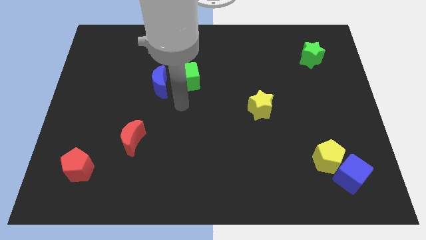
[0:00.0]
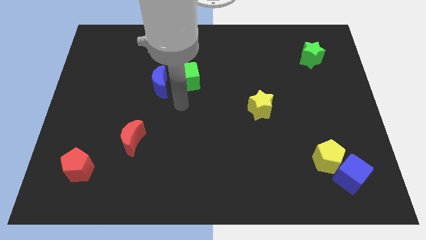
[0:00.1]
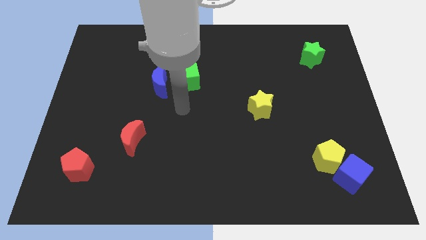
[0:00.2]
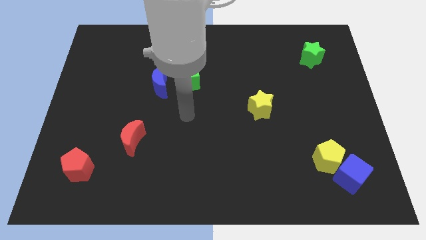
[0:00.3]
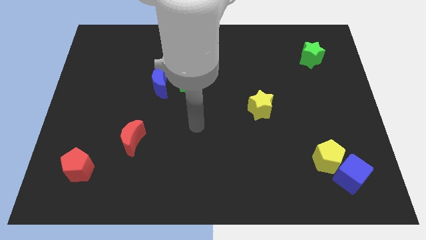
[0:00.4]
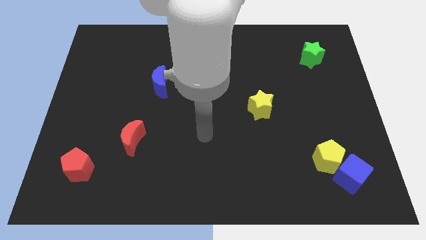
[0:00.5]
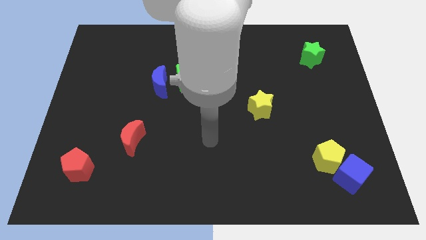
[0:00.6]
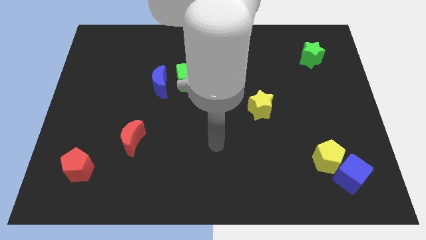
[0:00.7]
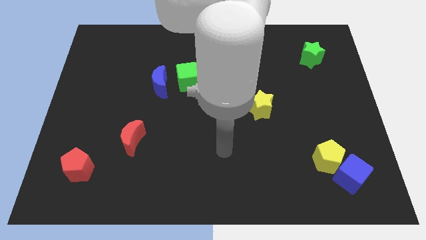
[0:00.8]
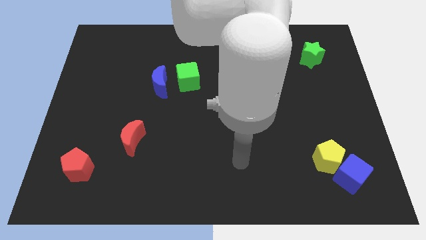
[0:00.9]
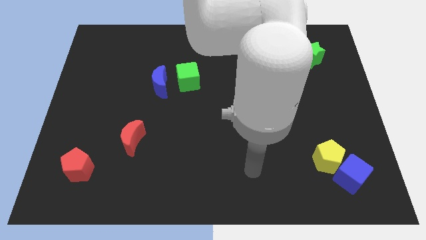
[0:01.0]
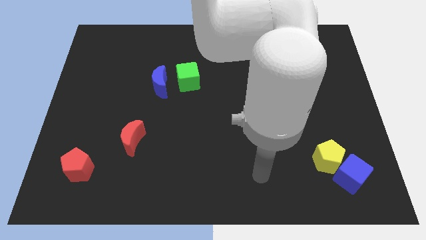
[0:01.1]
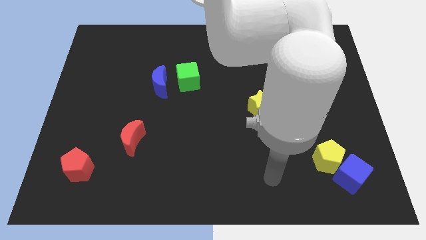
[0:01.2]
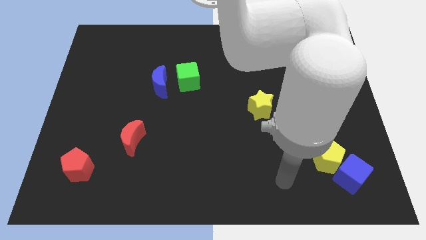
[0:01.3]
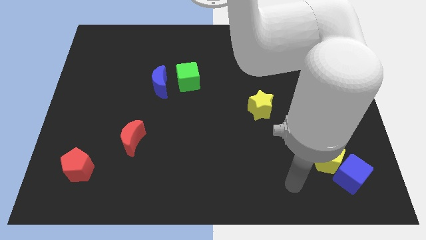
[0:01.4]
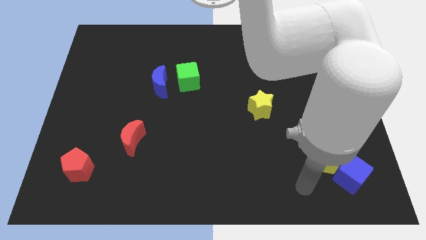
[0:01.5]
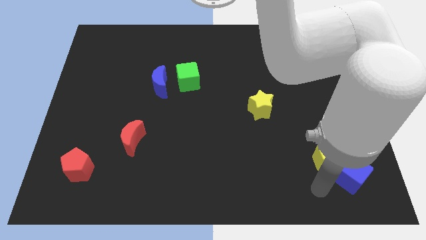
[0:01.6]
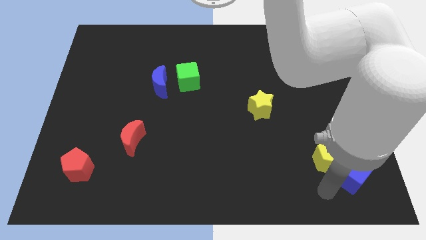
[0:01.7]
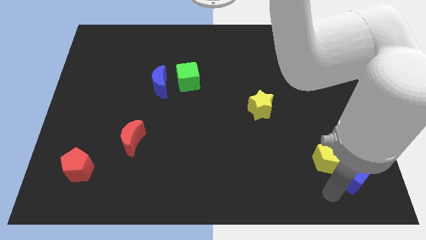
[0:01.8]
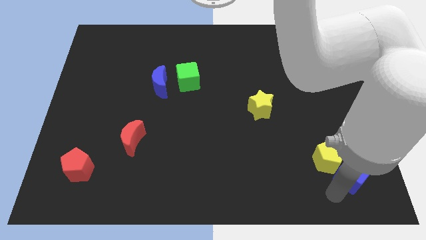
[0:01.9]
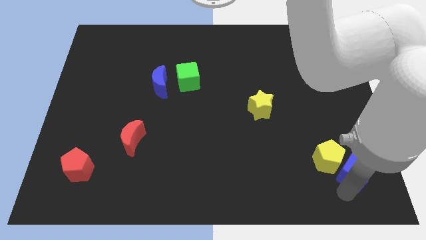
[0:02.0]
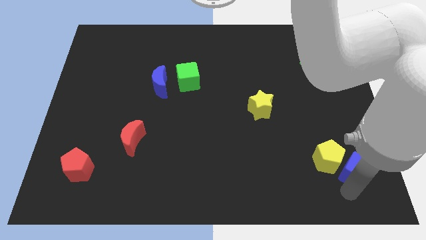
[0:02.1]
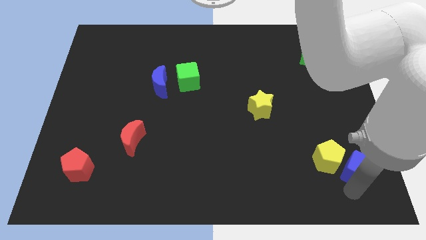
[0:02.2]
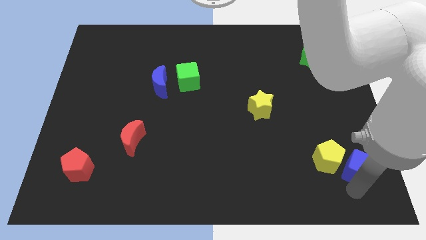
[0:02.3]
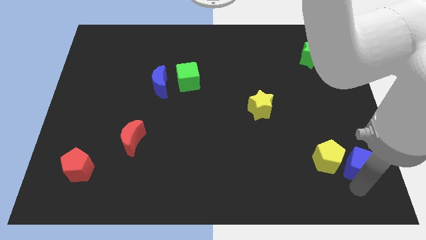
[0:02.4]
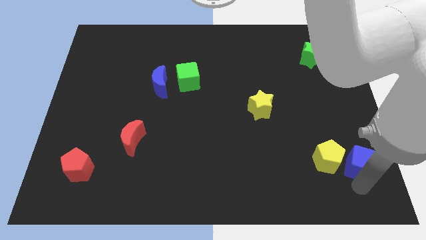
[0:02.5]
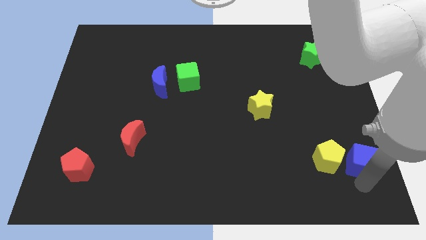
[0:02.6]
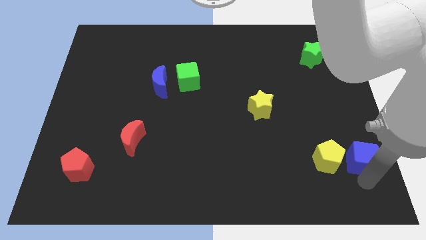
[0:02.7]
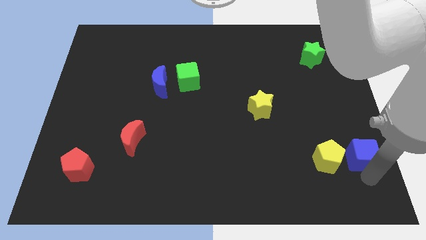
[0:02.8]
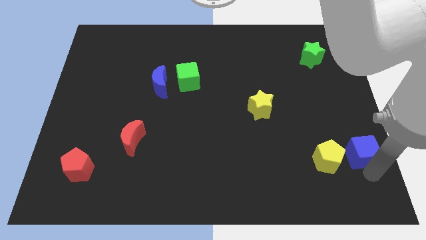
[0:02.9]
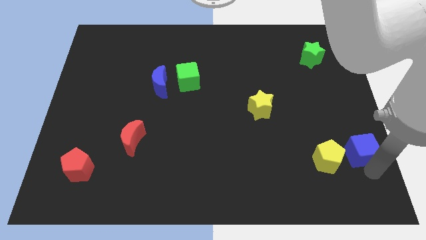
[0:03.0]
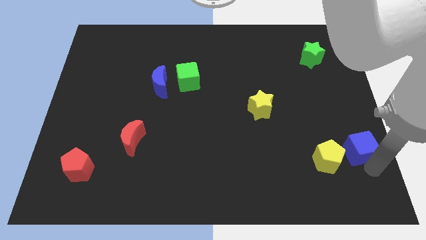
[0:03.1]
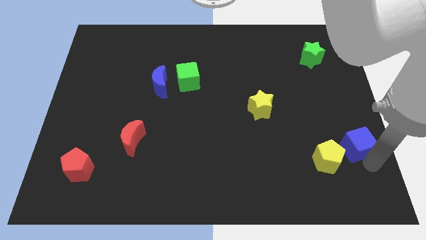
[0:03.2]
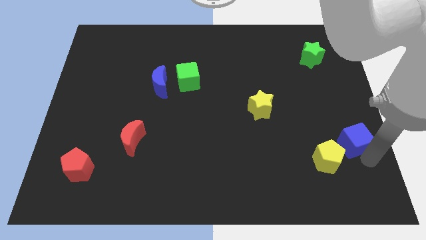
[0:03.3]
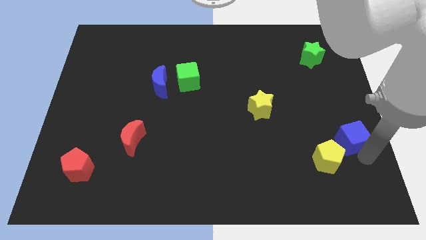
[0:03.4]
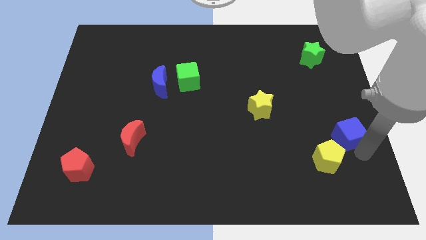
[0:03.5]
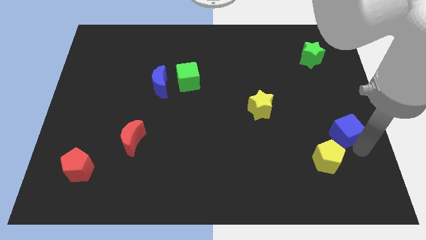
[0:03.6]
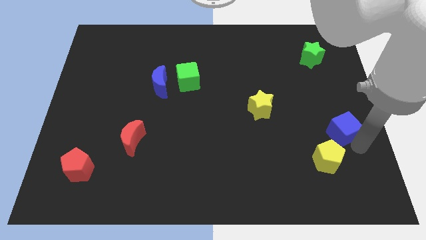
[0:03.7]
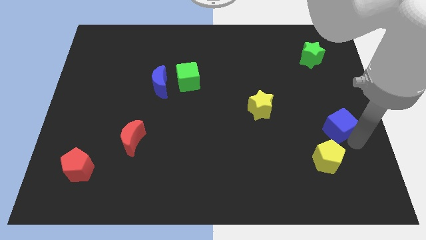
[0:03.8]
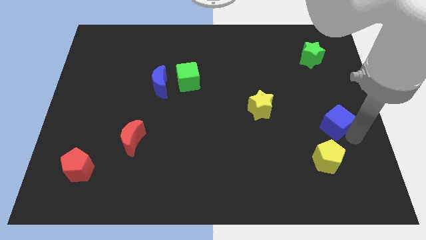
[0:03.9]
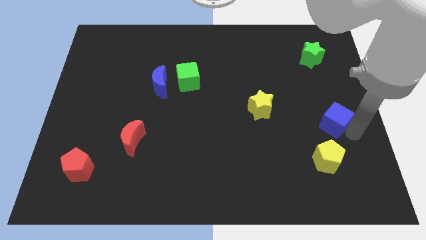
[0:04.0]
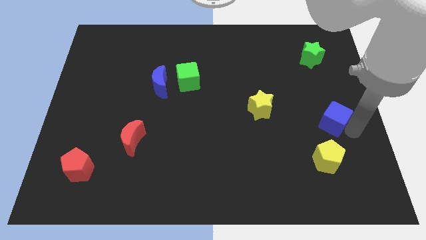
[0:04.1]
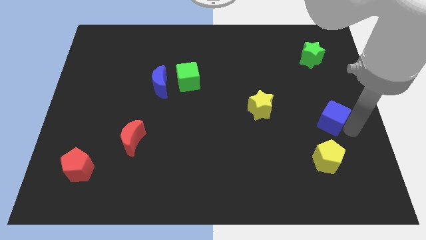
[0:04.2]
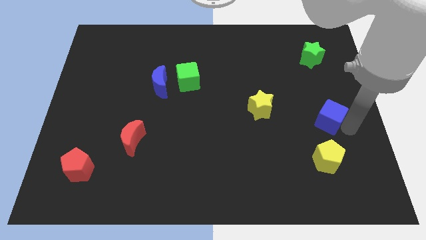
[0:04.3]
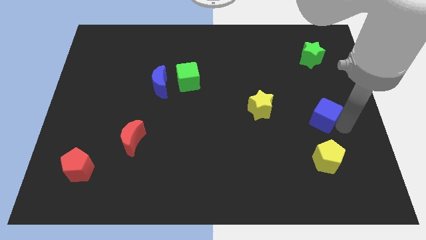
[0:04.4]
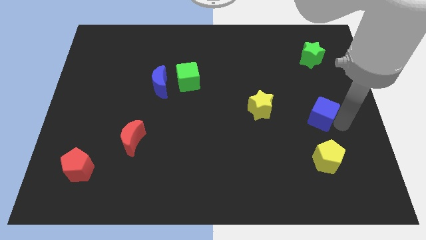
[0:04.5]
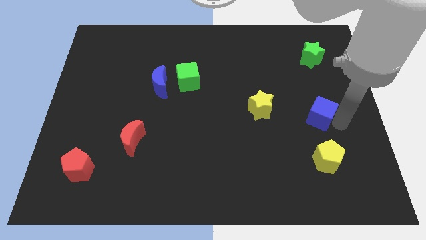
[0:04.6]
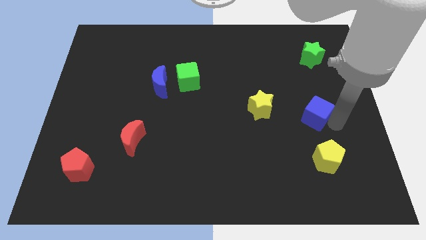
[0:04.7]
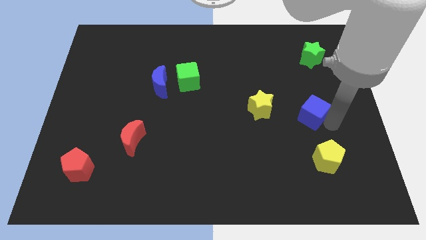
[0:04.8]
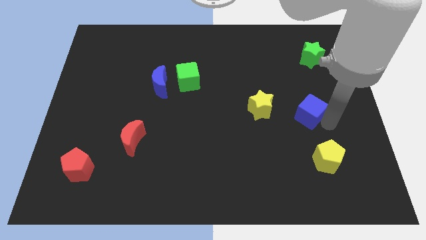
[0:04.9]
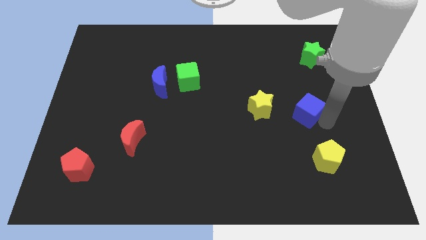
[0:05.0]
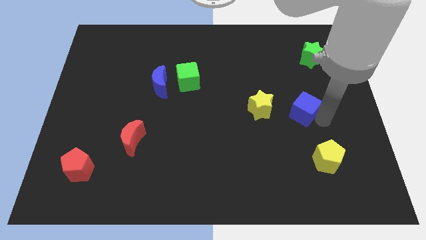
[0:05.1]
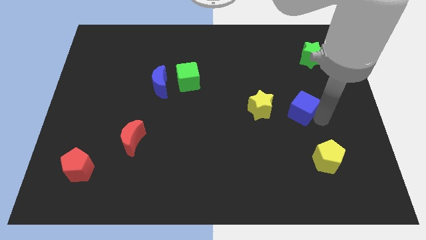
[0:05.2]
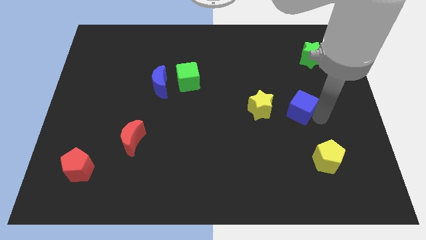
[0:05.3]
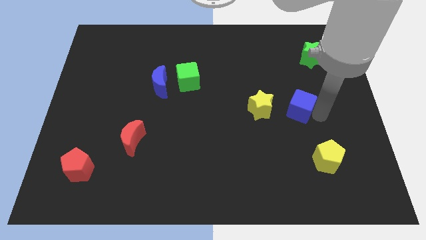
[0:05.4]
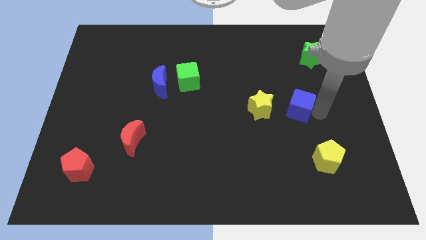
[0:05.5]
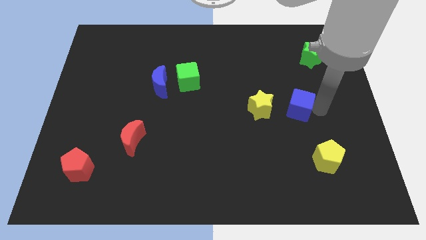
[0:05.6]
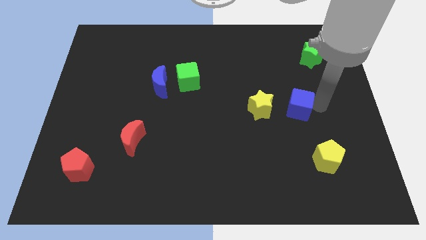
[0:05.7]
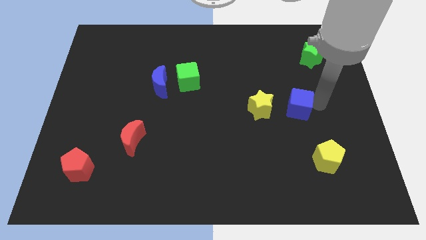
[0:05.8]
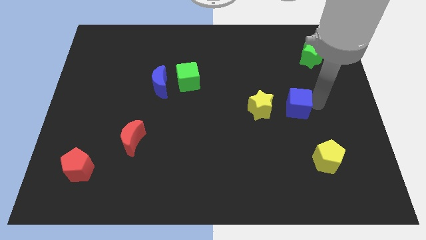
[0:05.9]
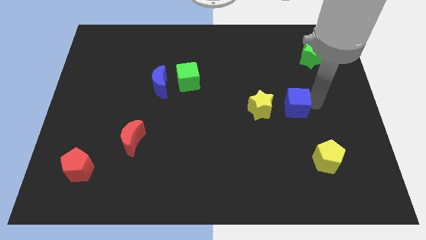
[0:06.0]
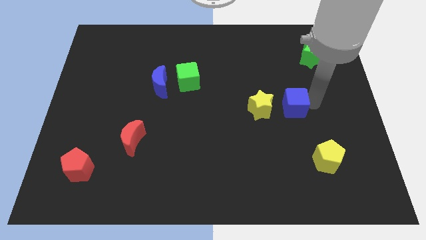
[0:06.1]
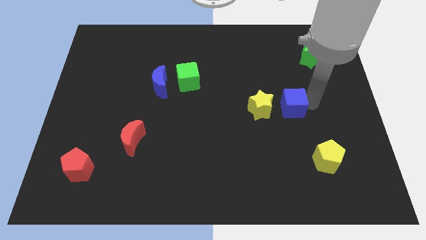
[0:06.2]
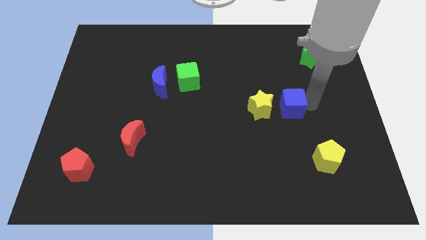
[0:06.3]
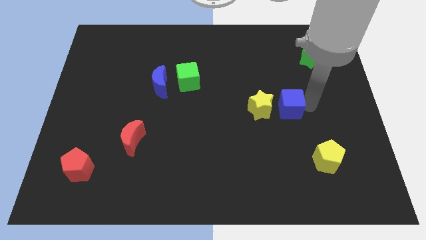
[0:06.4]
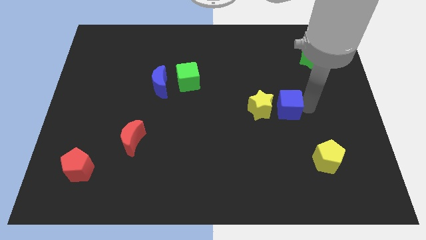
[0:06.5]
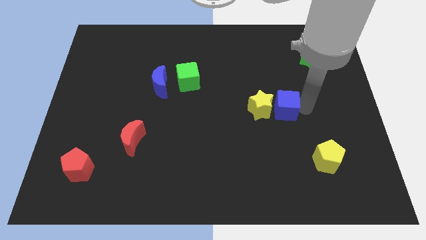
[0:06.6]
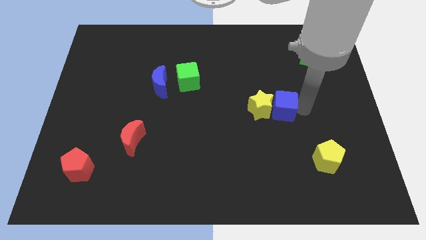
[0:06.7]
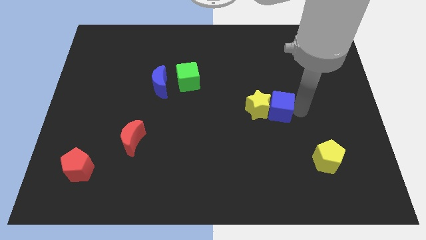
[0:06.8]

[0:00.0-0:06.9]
push the blue cube to the yellow star

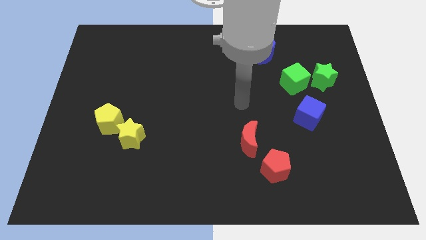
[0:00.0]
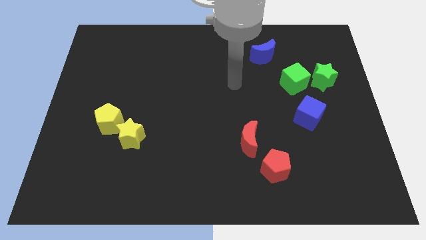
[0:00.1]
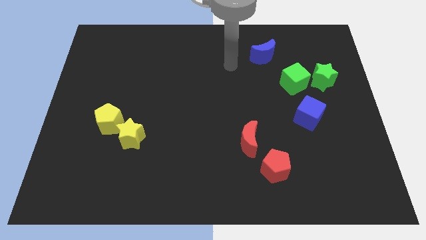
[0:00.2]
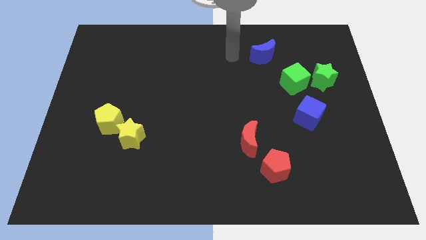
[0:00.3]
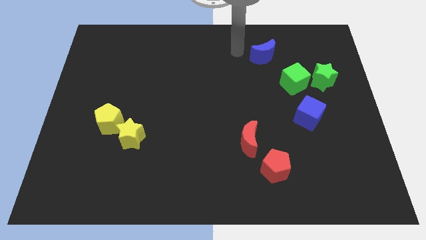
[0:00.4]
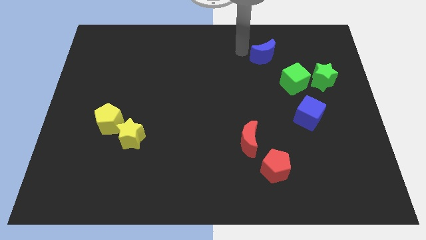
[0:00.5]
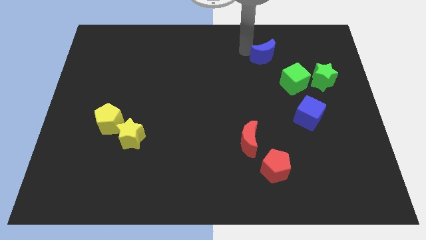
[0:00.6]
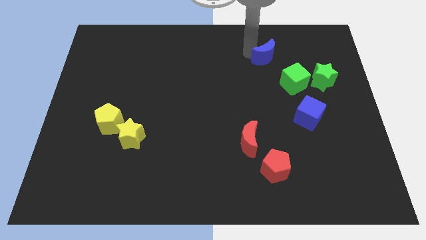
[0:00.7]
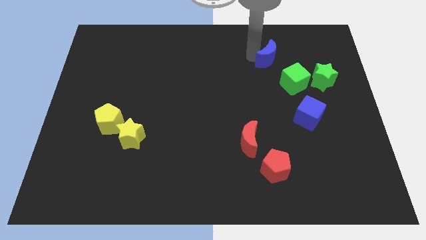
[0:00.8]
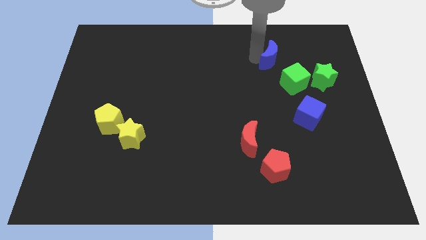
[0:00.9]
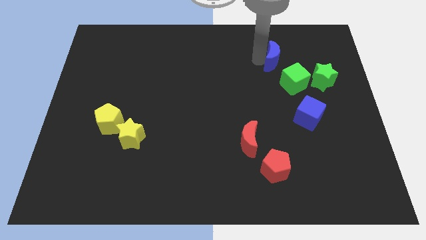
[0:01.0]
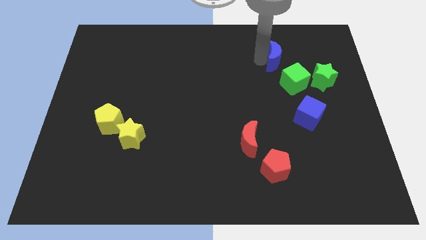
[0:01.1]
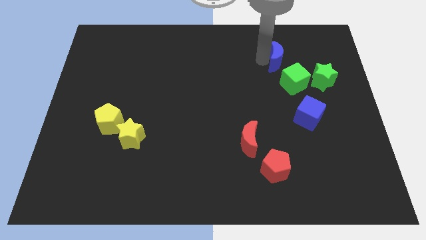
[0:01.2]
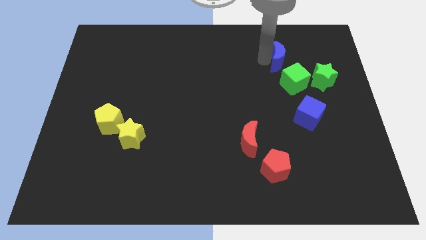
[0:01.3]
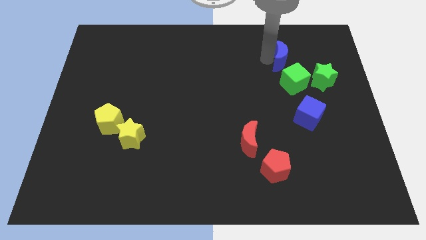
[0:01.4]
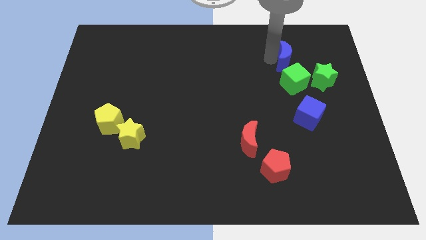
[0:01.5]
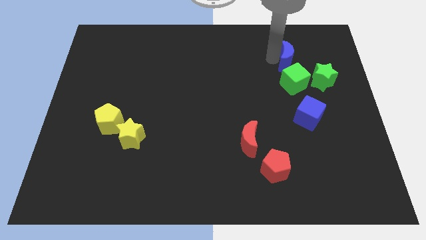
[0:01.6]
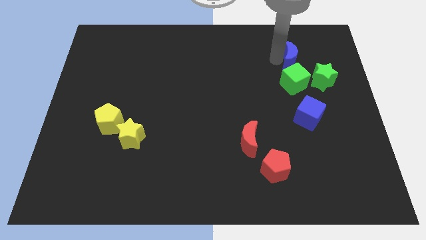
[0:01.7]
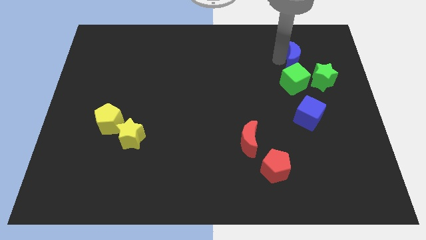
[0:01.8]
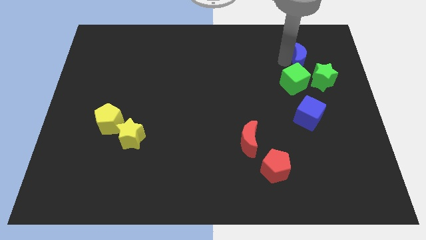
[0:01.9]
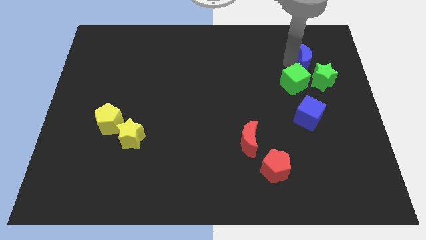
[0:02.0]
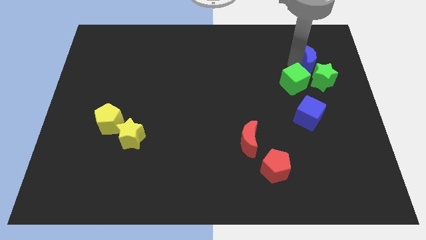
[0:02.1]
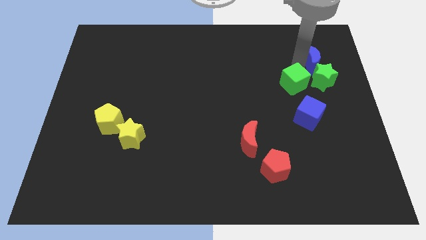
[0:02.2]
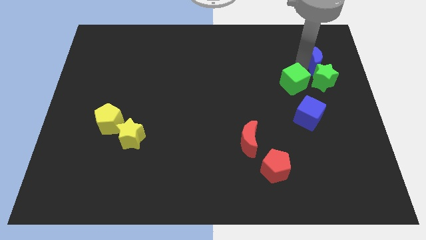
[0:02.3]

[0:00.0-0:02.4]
put the blue moon towards the green star
